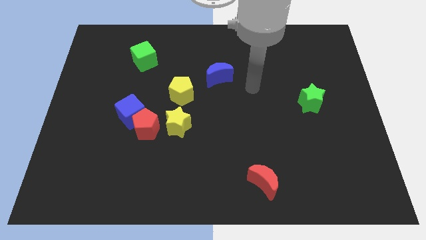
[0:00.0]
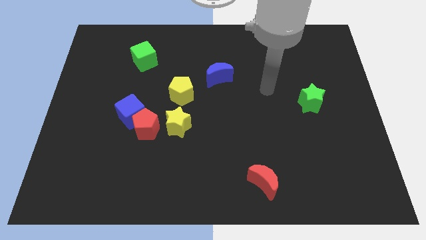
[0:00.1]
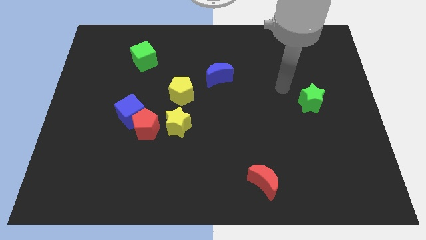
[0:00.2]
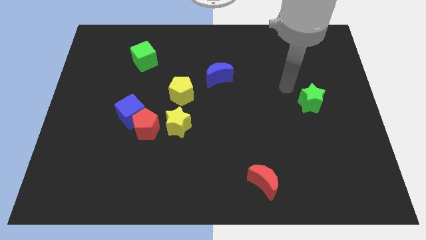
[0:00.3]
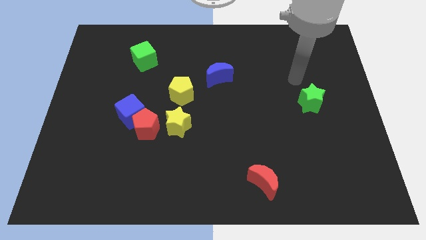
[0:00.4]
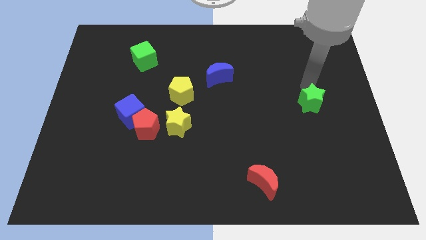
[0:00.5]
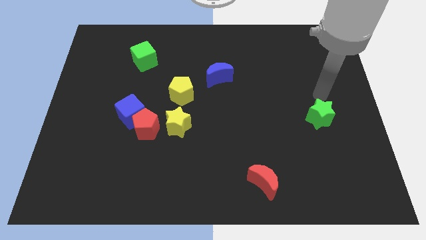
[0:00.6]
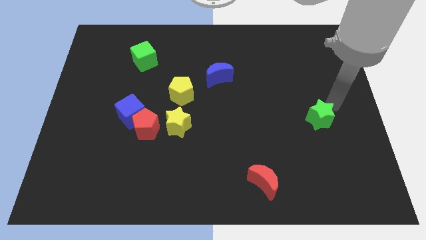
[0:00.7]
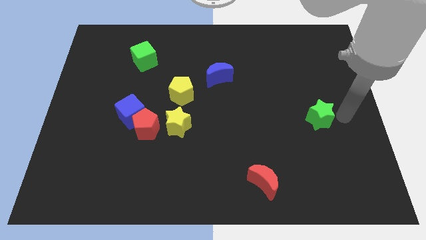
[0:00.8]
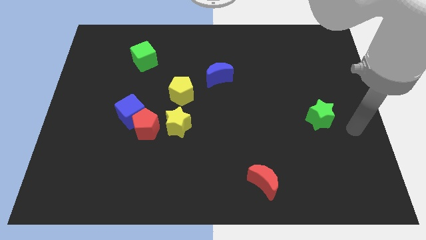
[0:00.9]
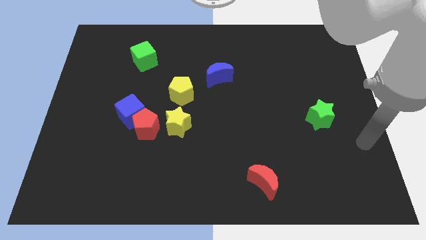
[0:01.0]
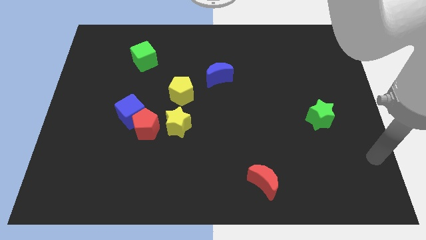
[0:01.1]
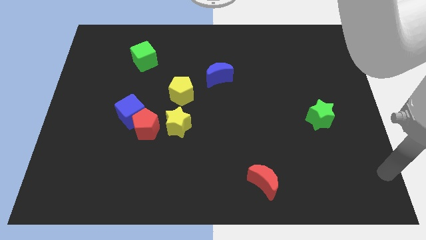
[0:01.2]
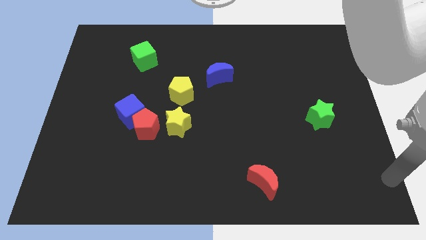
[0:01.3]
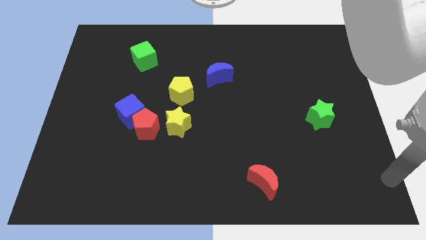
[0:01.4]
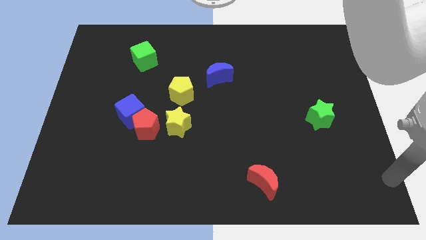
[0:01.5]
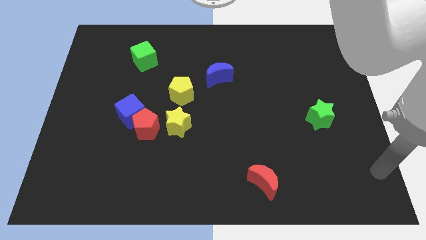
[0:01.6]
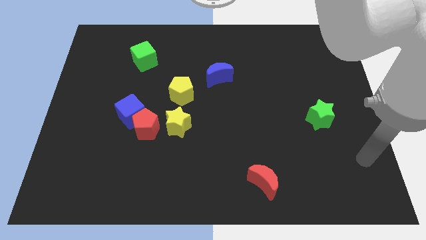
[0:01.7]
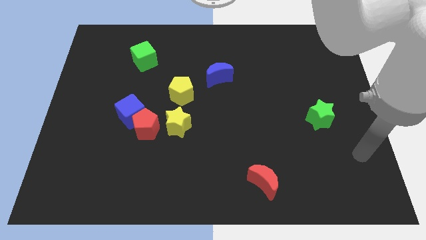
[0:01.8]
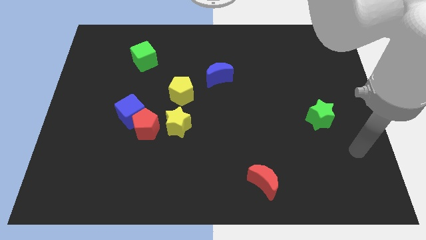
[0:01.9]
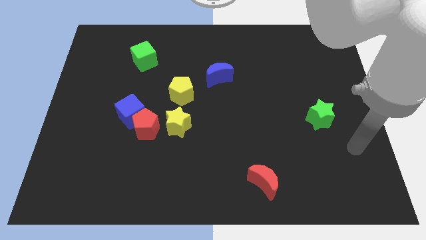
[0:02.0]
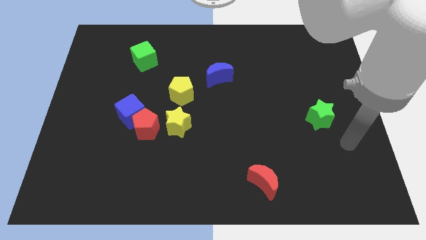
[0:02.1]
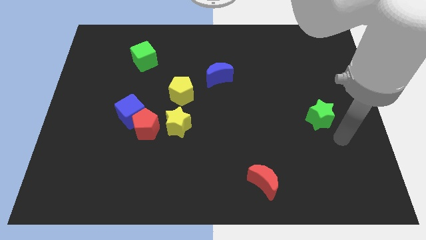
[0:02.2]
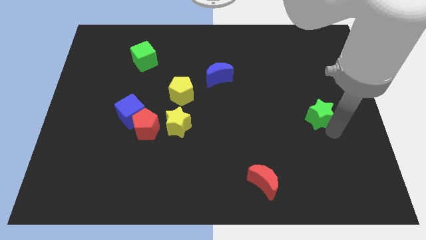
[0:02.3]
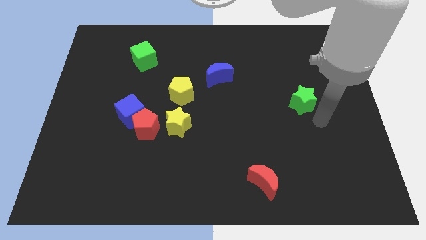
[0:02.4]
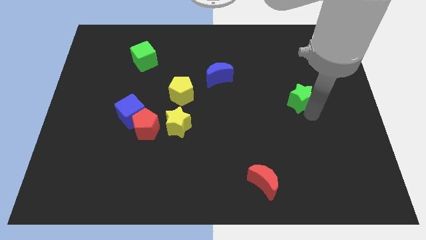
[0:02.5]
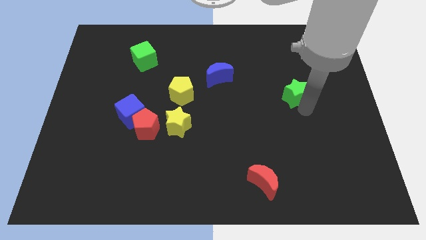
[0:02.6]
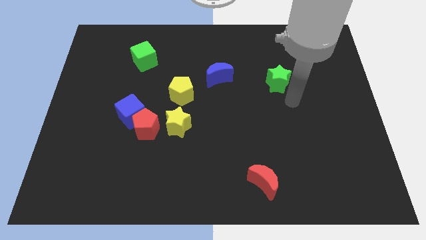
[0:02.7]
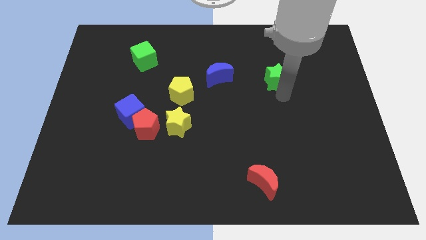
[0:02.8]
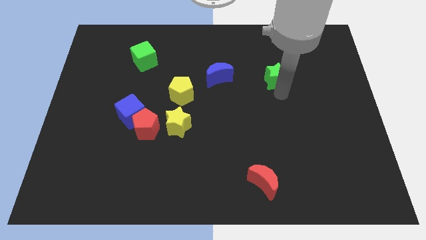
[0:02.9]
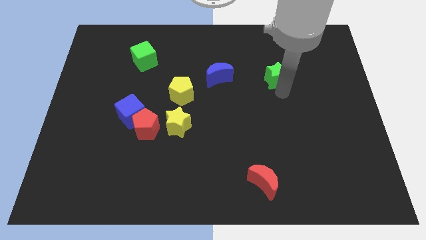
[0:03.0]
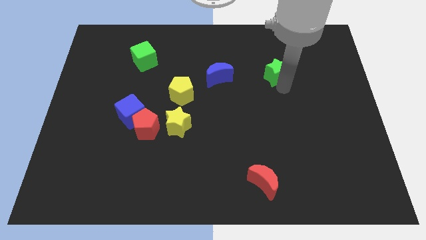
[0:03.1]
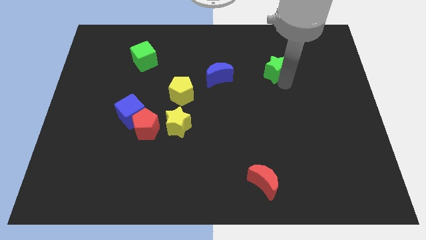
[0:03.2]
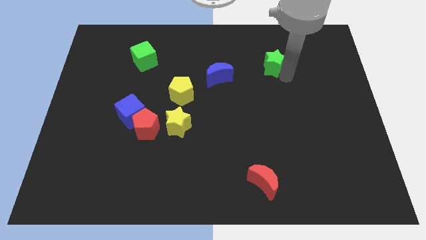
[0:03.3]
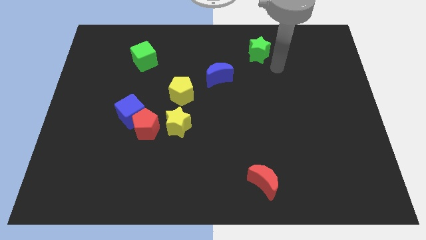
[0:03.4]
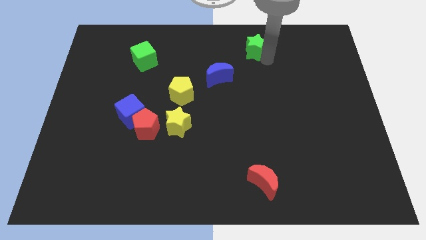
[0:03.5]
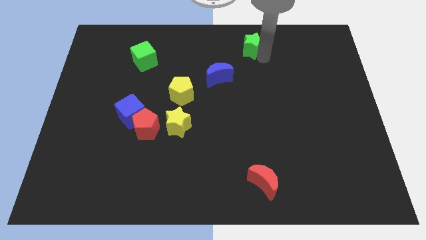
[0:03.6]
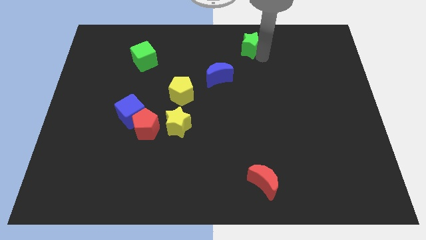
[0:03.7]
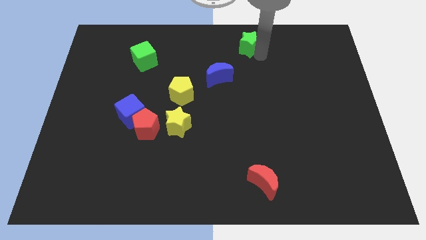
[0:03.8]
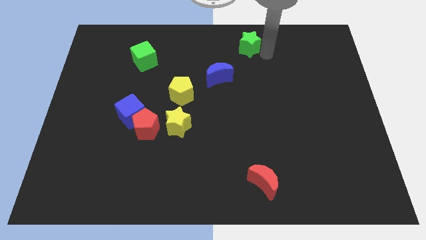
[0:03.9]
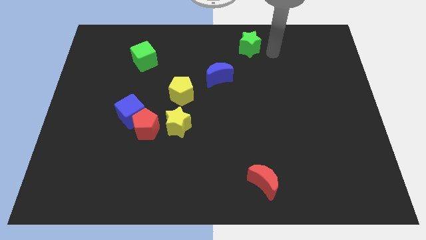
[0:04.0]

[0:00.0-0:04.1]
push green star towards top of the board

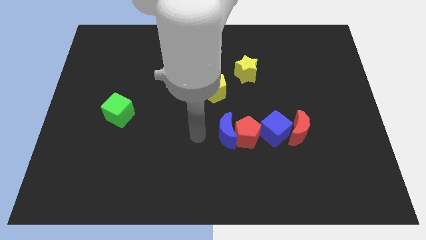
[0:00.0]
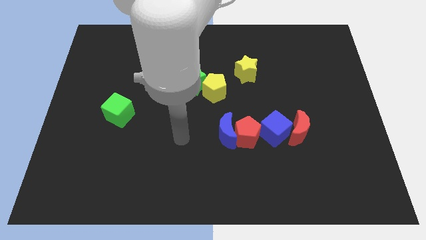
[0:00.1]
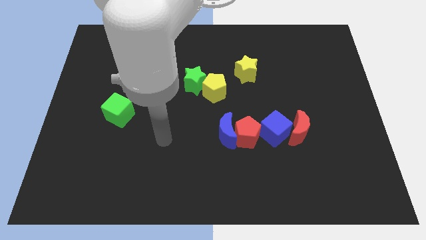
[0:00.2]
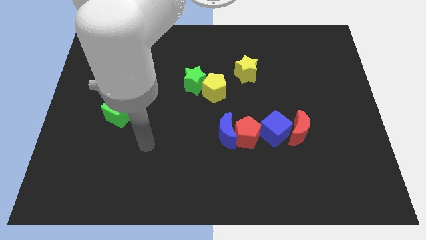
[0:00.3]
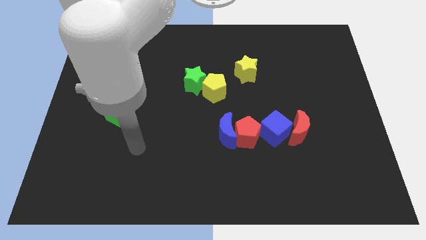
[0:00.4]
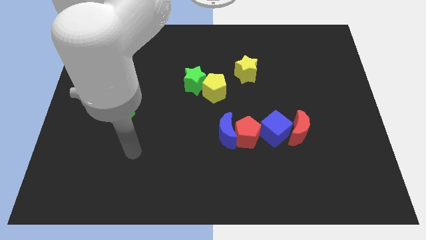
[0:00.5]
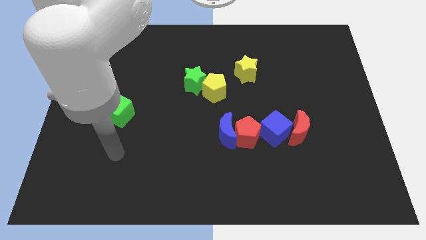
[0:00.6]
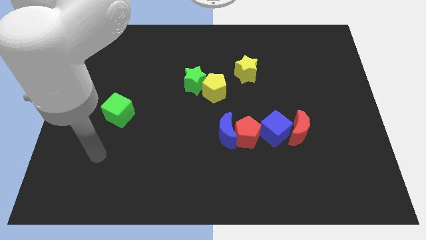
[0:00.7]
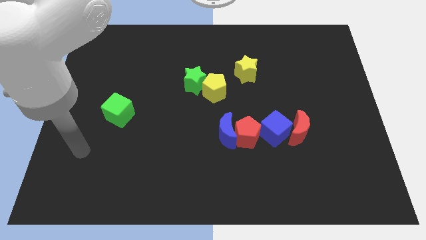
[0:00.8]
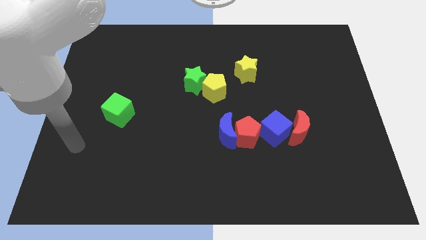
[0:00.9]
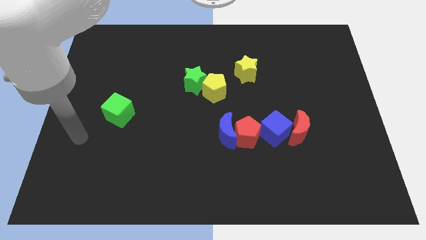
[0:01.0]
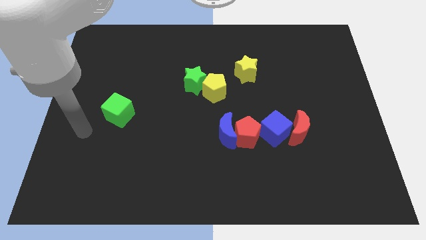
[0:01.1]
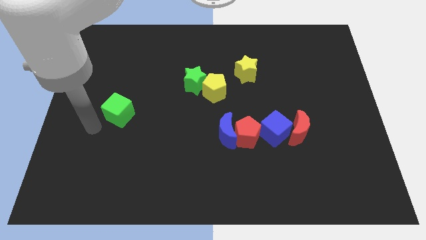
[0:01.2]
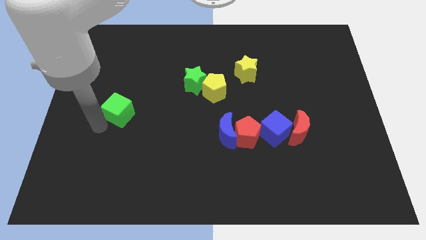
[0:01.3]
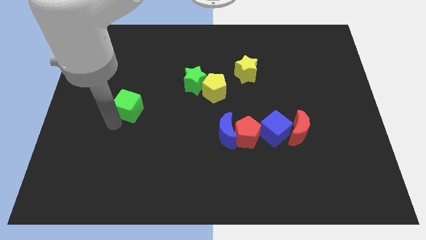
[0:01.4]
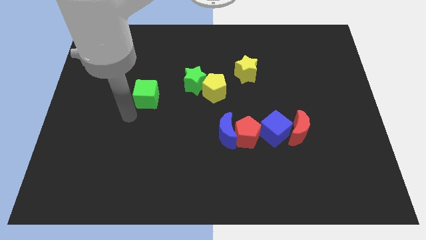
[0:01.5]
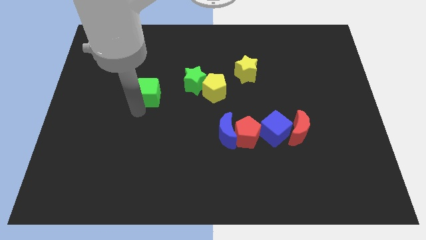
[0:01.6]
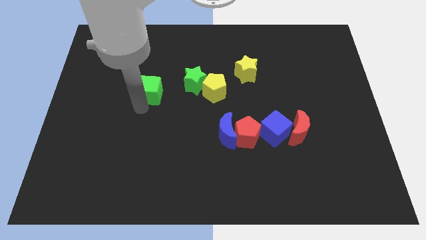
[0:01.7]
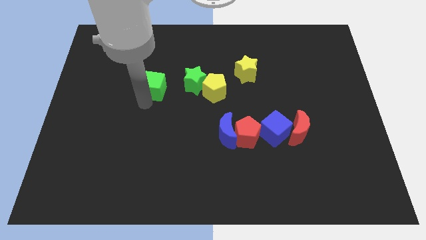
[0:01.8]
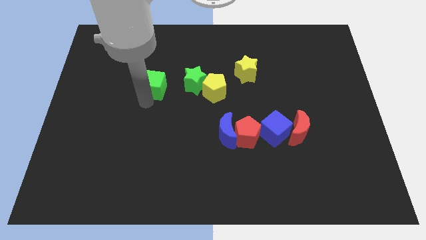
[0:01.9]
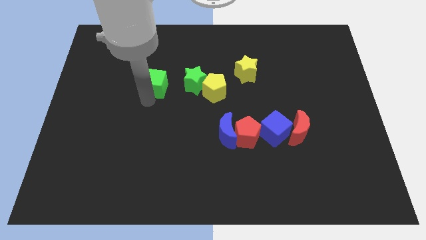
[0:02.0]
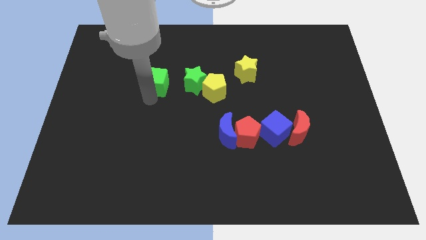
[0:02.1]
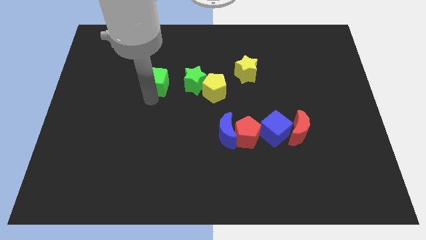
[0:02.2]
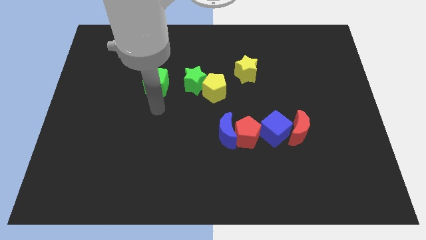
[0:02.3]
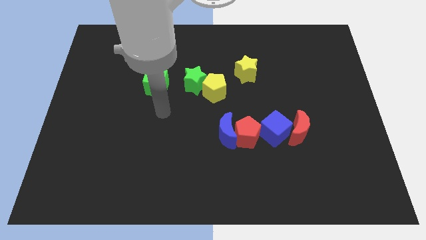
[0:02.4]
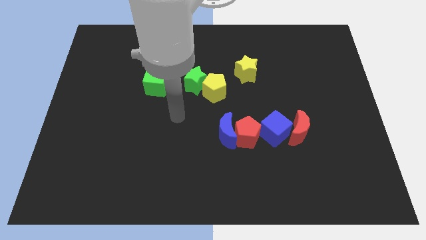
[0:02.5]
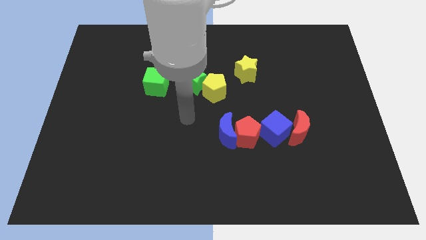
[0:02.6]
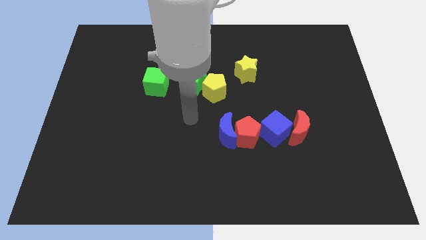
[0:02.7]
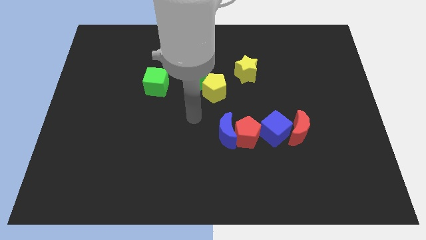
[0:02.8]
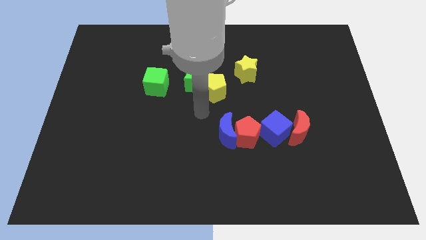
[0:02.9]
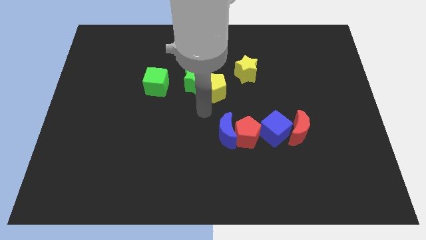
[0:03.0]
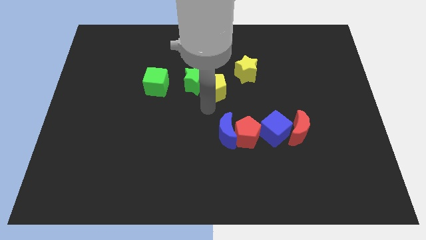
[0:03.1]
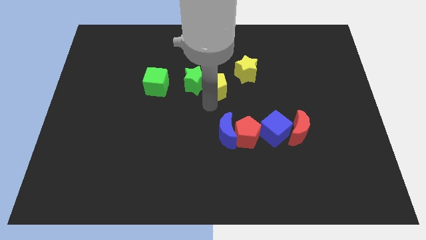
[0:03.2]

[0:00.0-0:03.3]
put the green cube parallel left to the green star

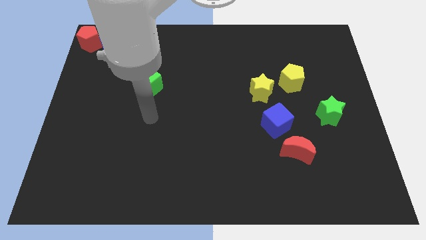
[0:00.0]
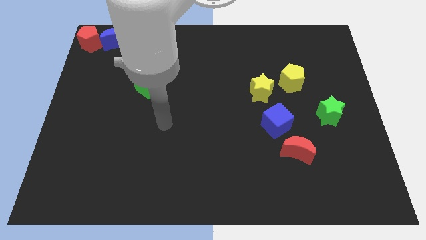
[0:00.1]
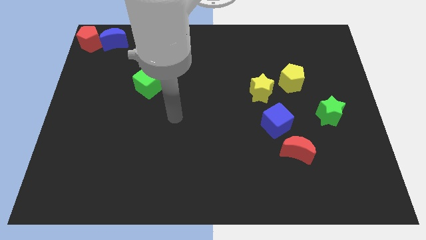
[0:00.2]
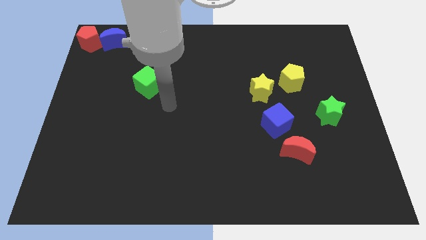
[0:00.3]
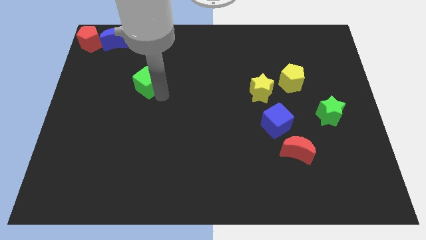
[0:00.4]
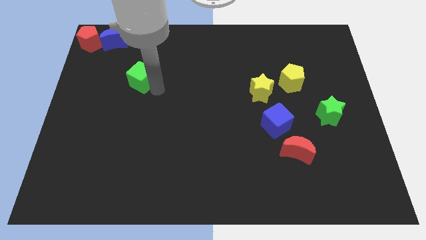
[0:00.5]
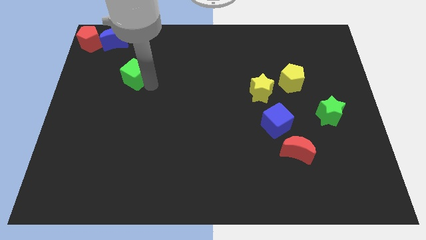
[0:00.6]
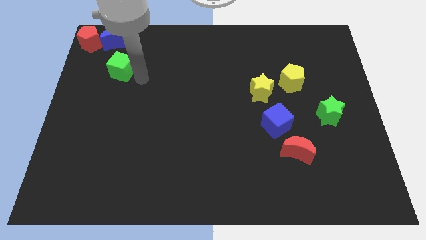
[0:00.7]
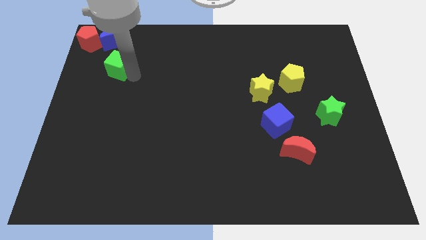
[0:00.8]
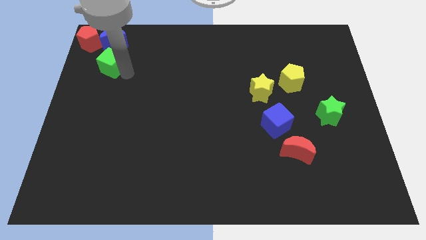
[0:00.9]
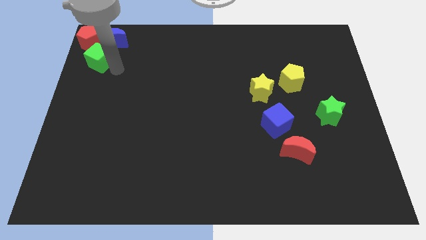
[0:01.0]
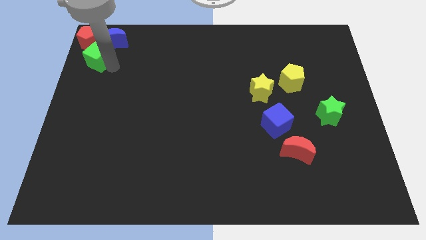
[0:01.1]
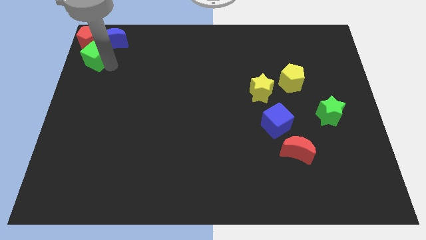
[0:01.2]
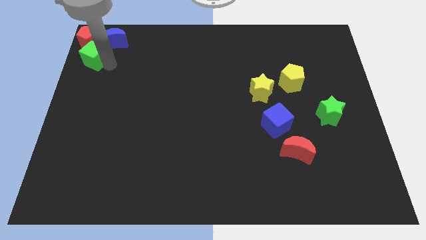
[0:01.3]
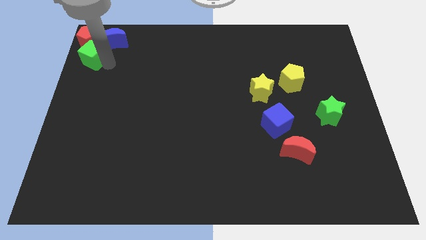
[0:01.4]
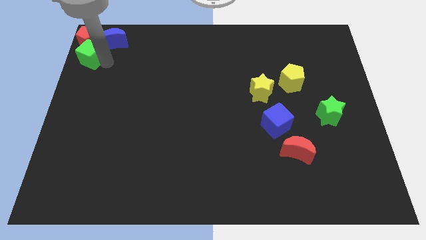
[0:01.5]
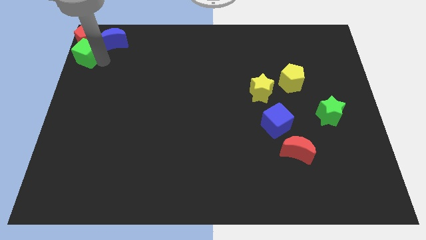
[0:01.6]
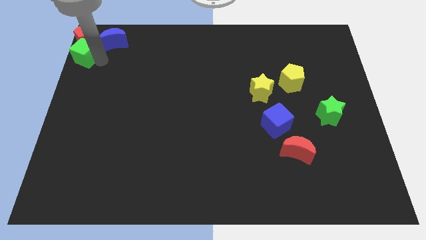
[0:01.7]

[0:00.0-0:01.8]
place the green cube to the bottom side of the red pentagon
